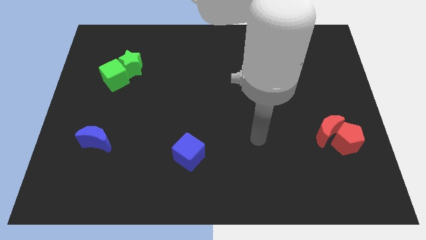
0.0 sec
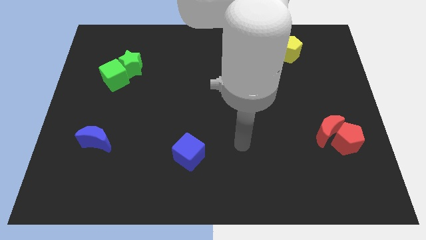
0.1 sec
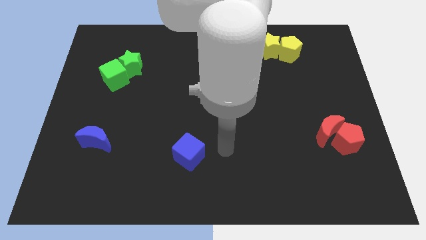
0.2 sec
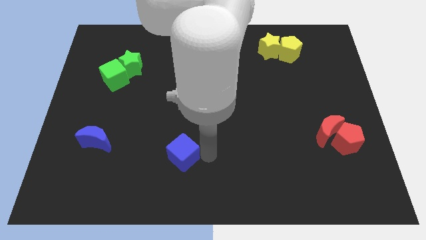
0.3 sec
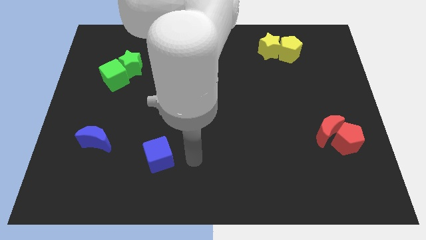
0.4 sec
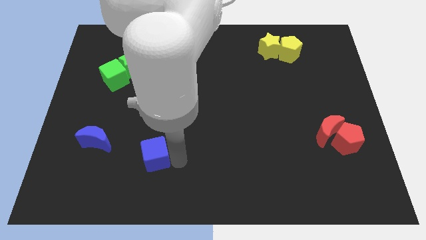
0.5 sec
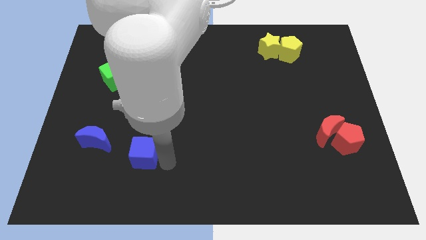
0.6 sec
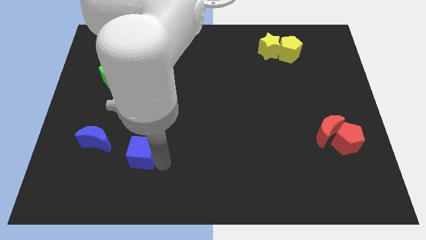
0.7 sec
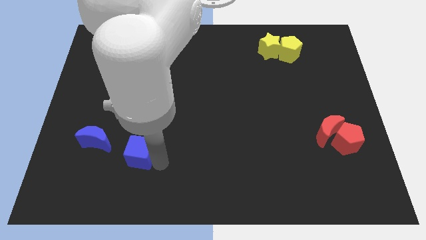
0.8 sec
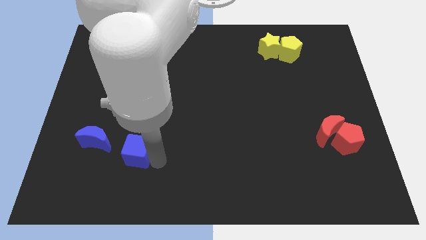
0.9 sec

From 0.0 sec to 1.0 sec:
push the blue cube slightly to the left

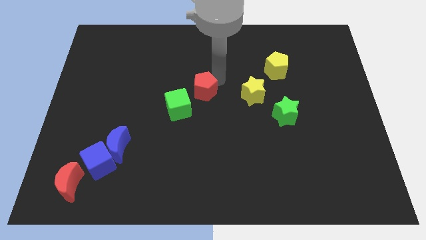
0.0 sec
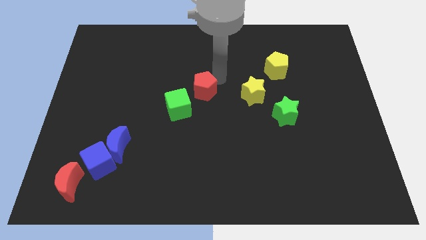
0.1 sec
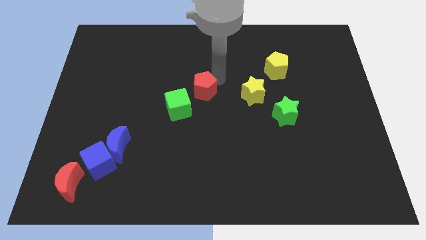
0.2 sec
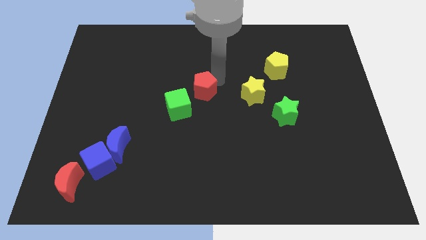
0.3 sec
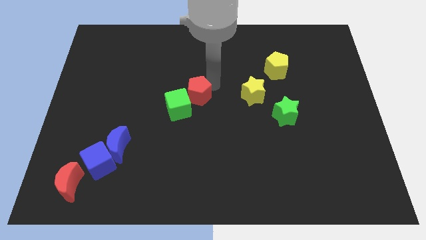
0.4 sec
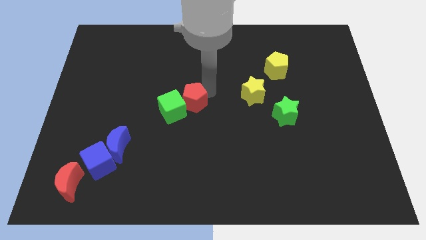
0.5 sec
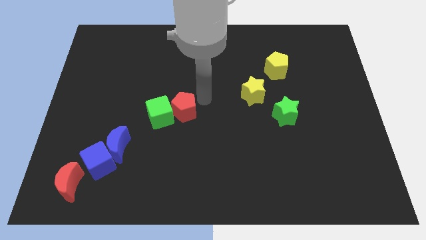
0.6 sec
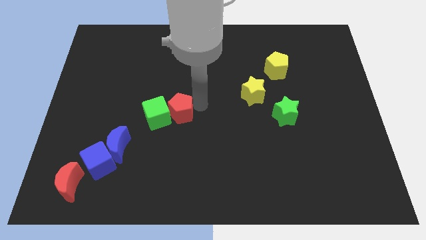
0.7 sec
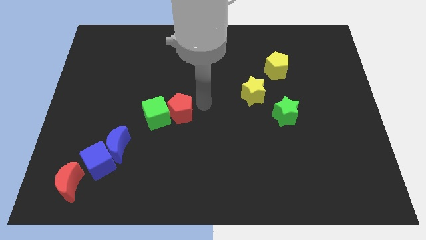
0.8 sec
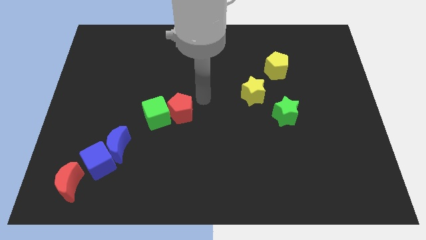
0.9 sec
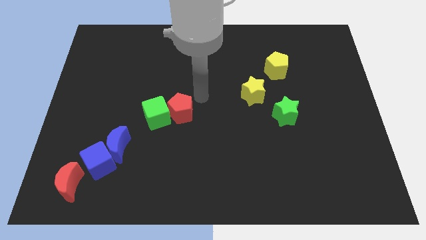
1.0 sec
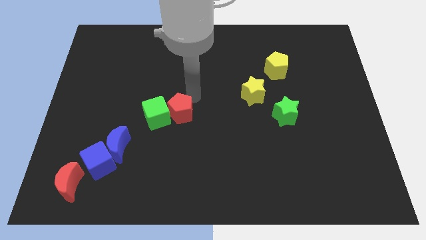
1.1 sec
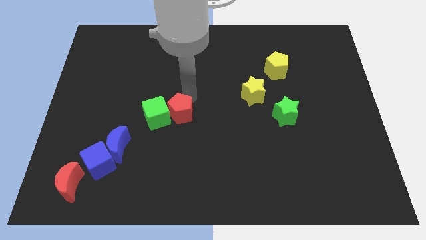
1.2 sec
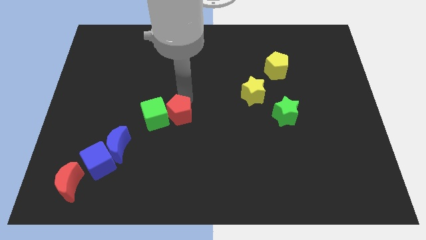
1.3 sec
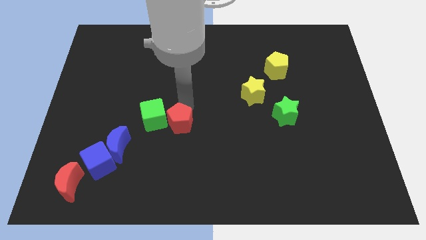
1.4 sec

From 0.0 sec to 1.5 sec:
push the red pentagon to the right side of the green cube

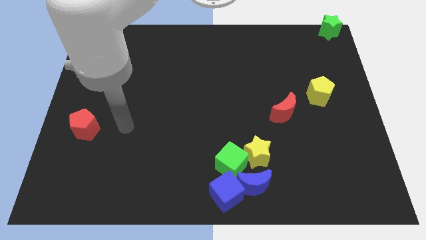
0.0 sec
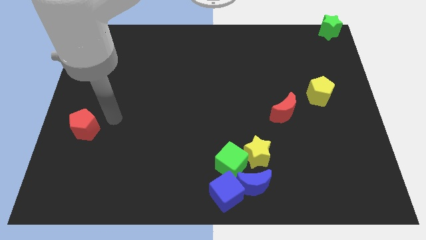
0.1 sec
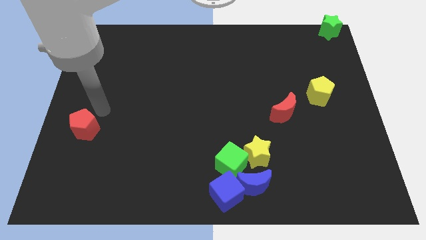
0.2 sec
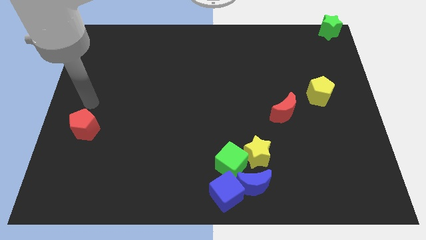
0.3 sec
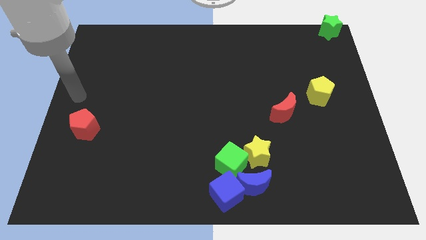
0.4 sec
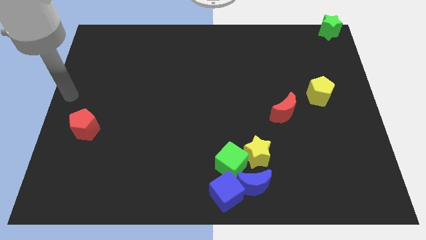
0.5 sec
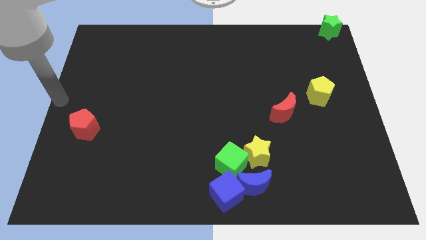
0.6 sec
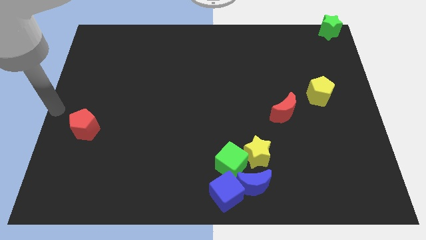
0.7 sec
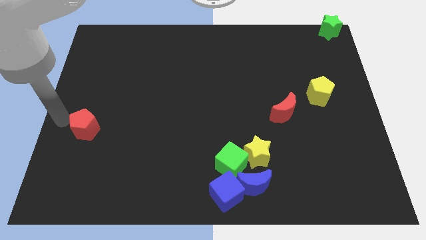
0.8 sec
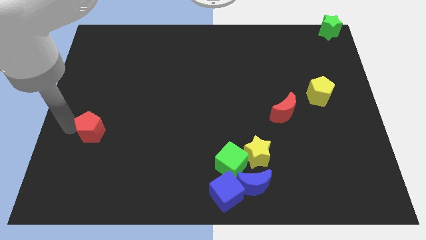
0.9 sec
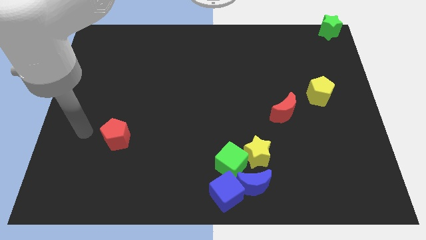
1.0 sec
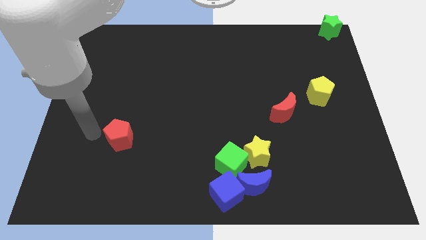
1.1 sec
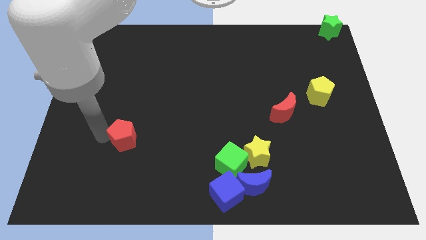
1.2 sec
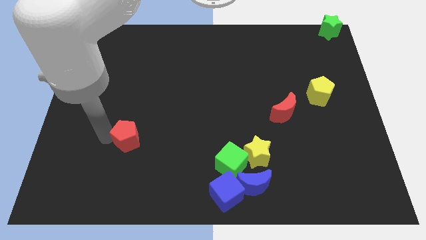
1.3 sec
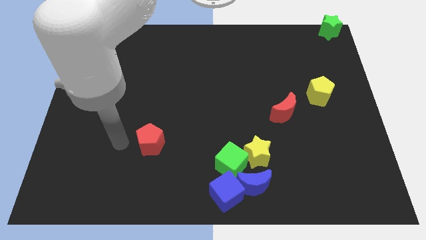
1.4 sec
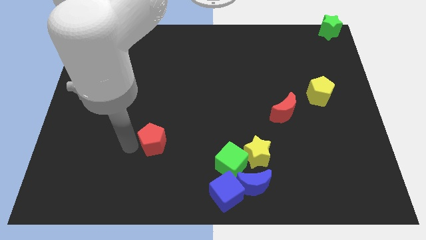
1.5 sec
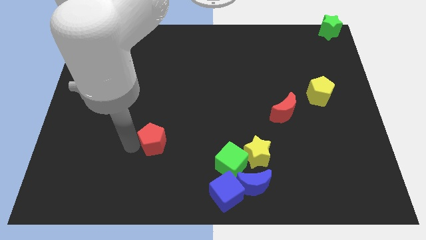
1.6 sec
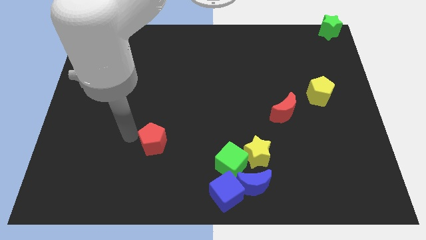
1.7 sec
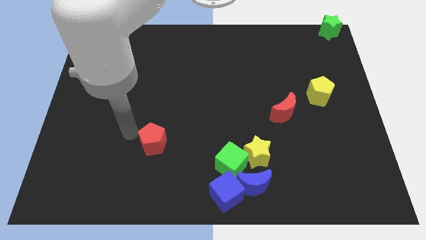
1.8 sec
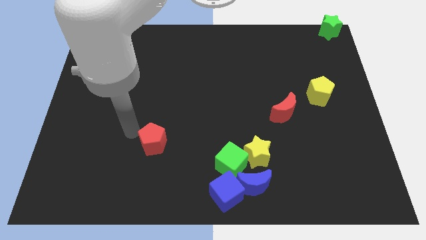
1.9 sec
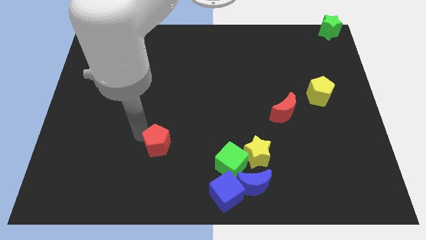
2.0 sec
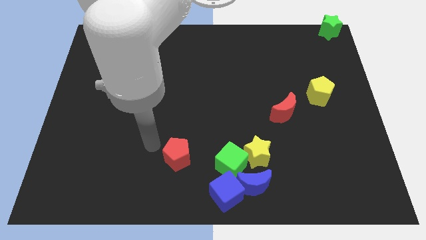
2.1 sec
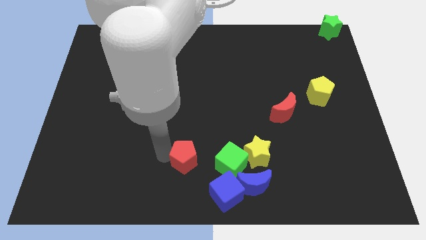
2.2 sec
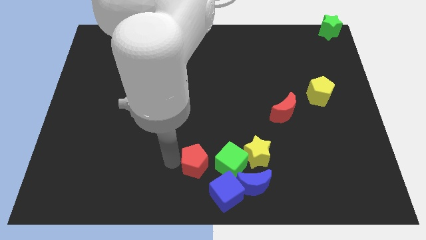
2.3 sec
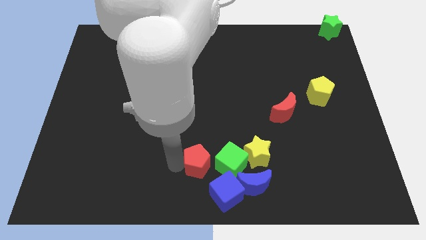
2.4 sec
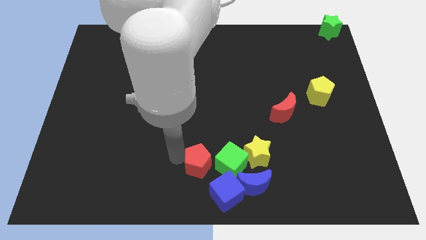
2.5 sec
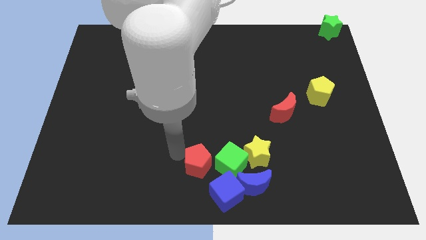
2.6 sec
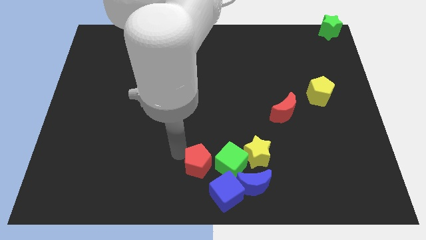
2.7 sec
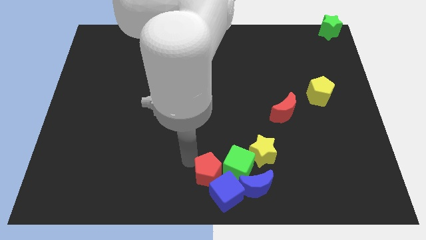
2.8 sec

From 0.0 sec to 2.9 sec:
move red pentagon to the left of green cube

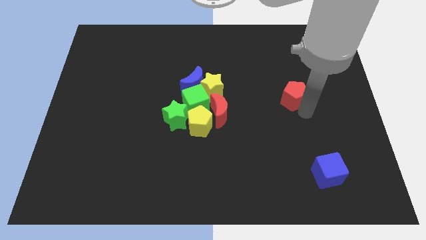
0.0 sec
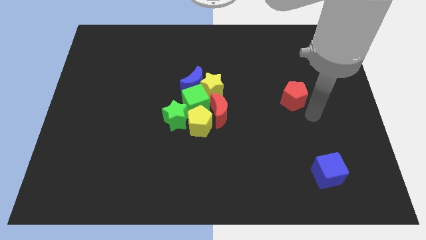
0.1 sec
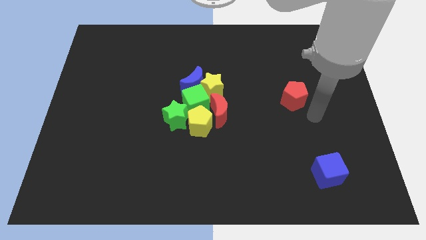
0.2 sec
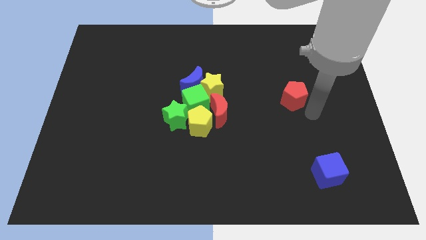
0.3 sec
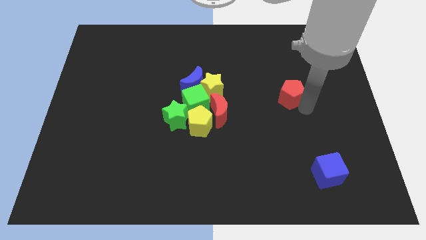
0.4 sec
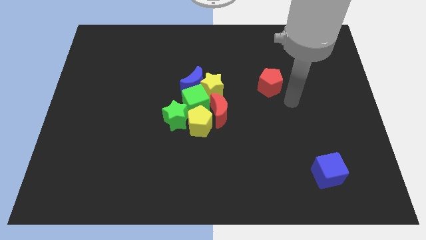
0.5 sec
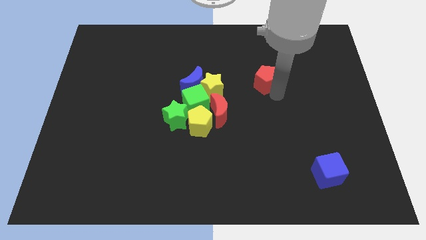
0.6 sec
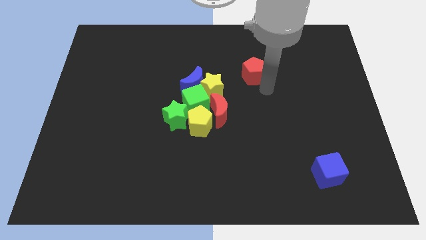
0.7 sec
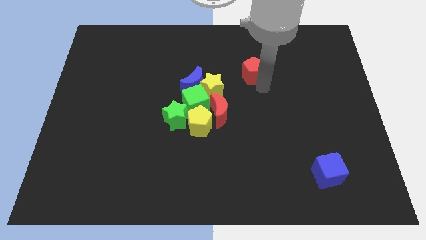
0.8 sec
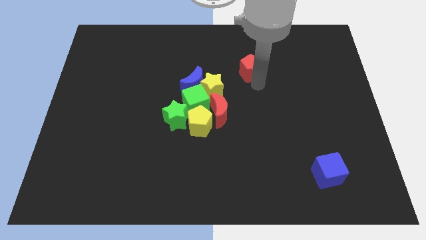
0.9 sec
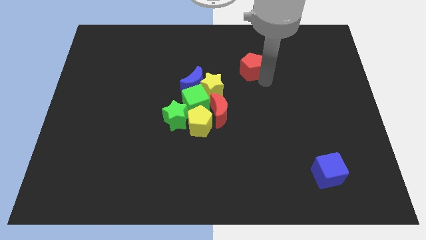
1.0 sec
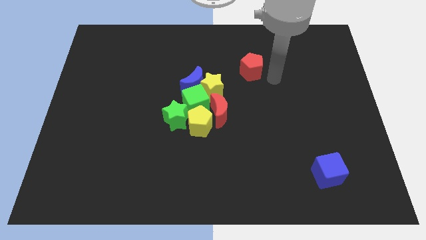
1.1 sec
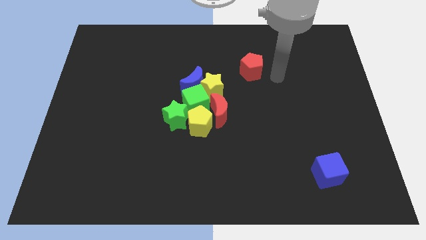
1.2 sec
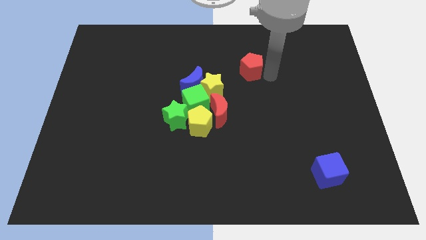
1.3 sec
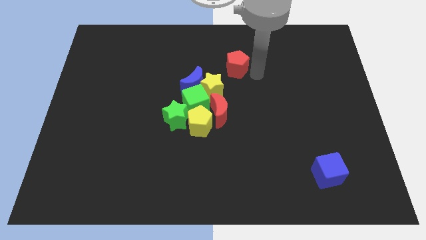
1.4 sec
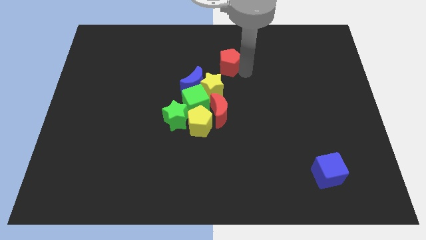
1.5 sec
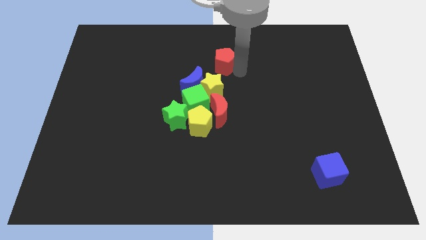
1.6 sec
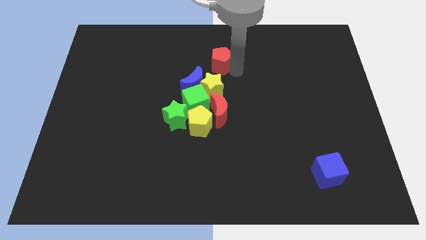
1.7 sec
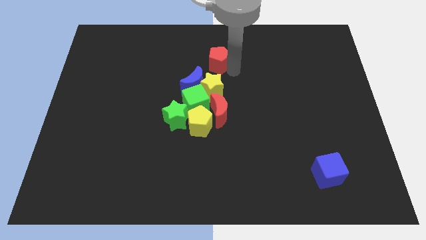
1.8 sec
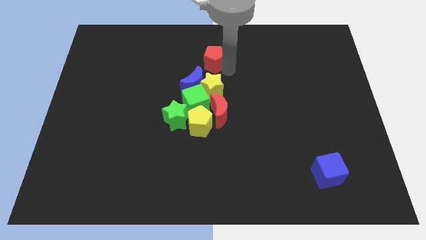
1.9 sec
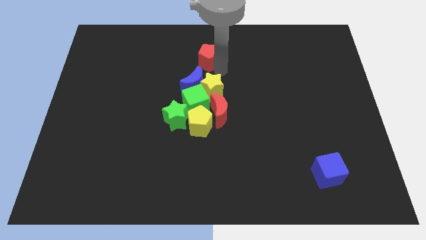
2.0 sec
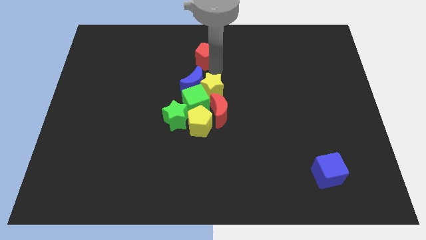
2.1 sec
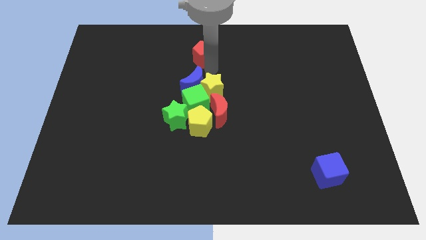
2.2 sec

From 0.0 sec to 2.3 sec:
put the red pentagon above the blue moon

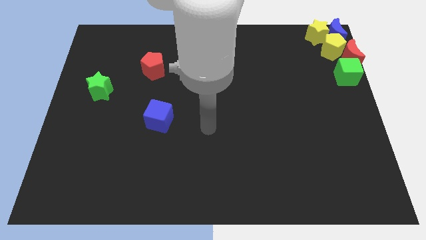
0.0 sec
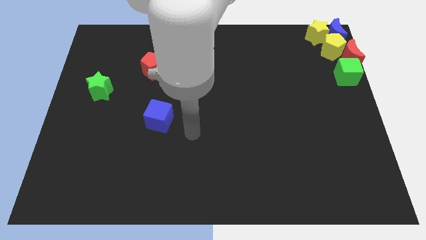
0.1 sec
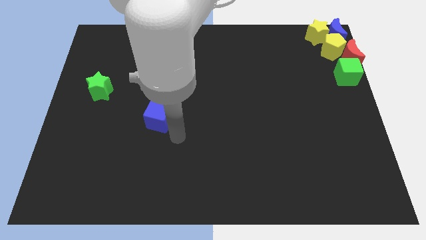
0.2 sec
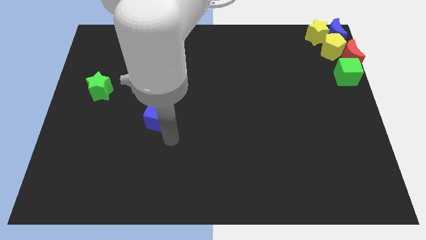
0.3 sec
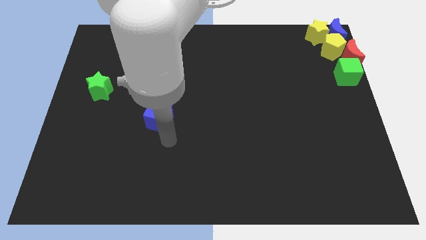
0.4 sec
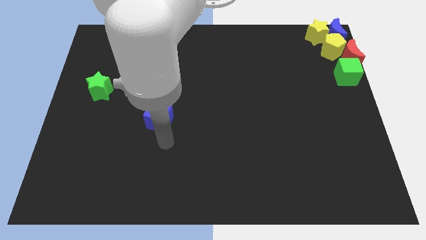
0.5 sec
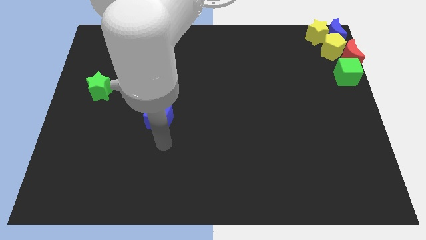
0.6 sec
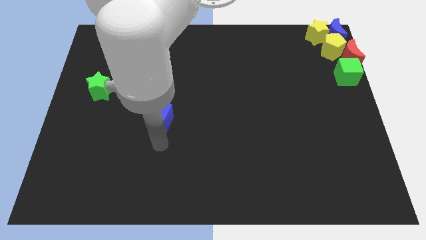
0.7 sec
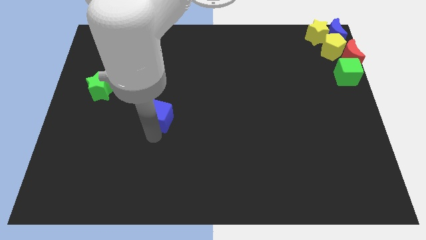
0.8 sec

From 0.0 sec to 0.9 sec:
place the arm down to the blue cube

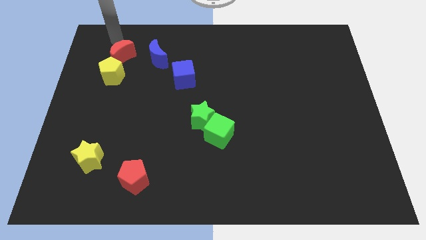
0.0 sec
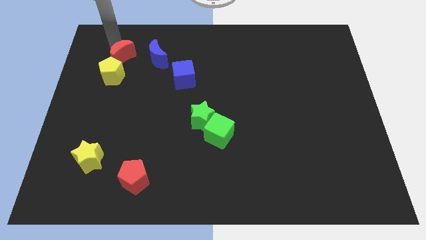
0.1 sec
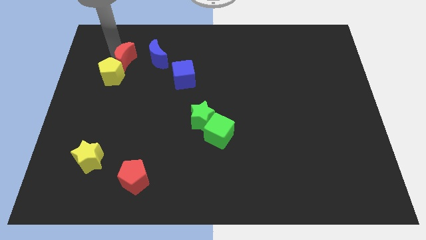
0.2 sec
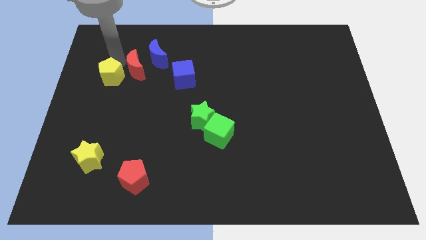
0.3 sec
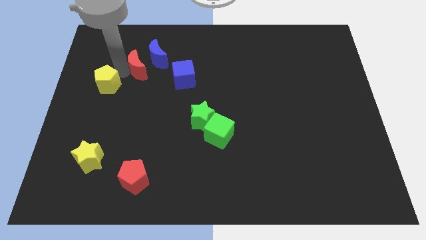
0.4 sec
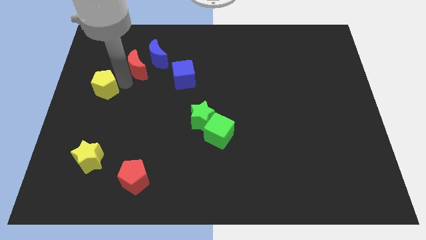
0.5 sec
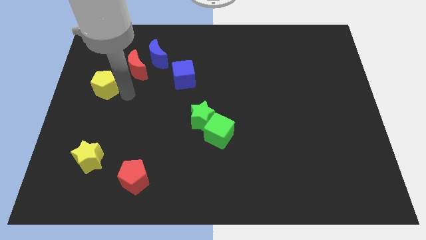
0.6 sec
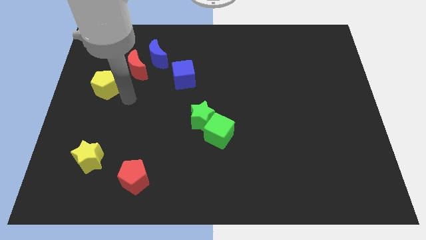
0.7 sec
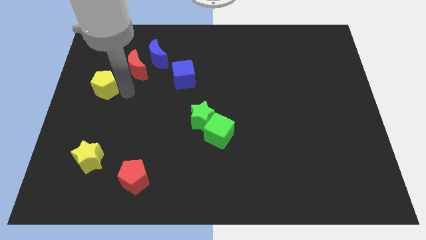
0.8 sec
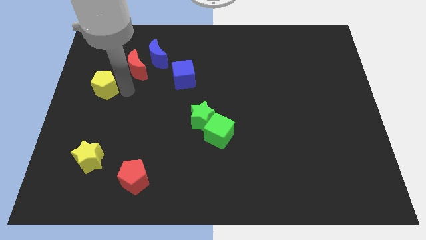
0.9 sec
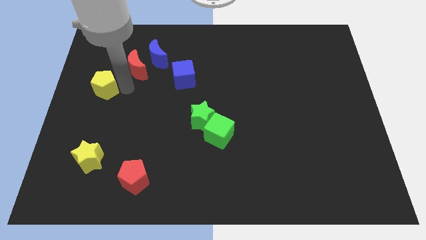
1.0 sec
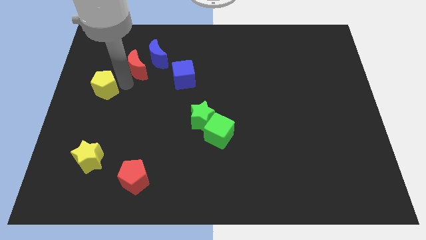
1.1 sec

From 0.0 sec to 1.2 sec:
separate red moon and the yellow pentagon
